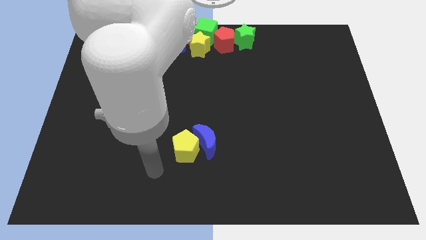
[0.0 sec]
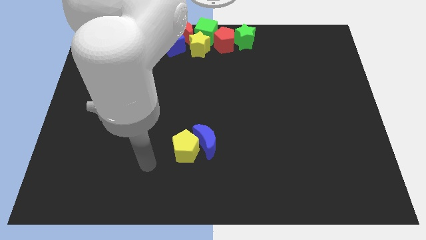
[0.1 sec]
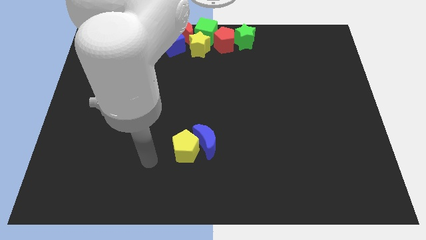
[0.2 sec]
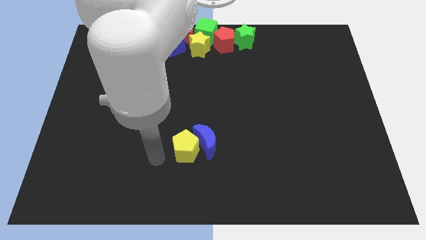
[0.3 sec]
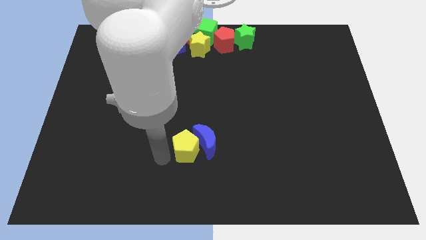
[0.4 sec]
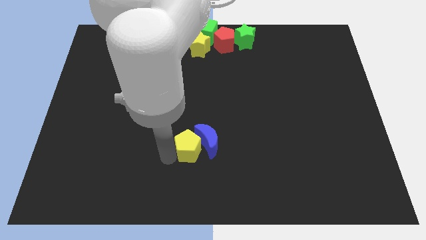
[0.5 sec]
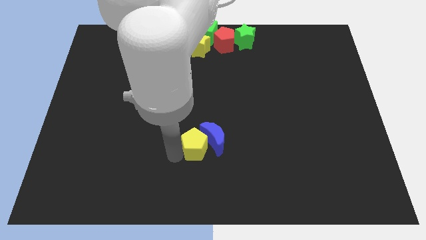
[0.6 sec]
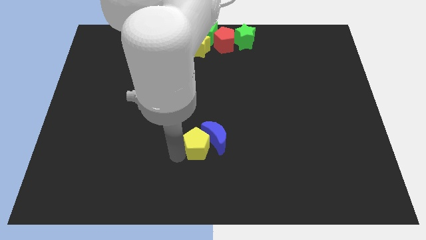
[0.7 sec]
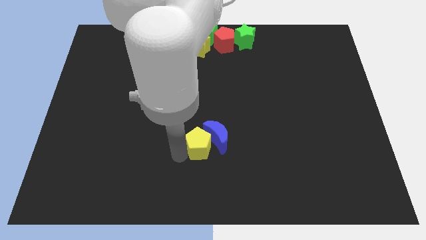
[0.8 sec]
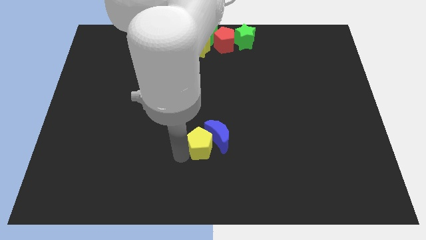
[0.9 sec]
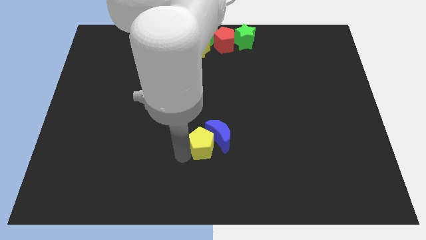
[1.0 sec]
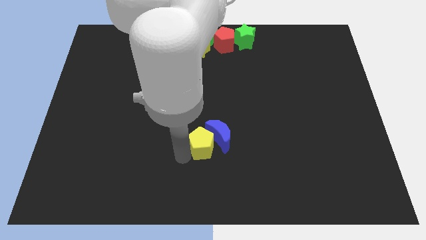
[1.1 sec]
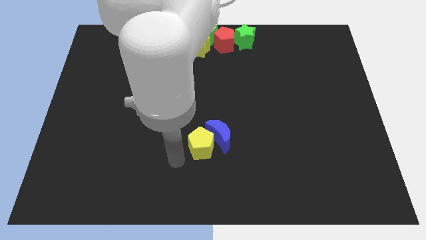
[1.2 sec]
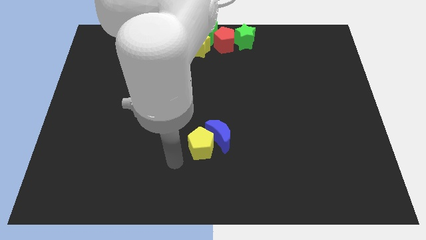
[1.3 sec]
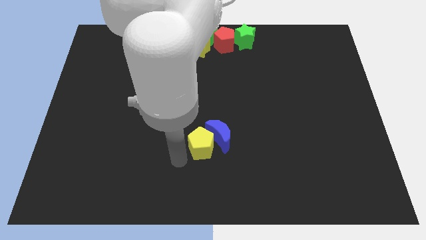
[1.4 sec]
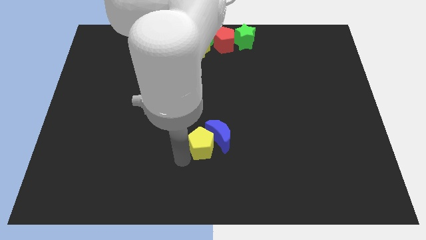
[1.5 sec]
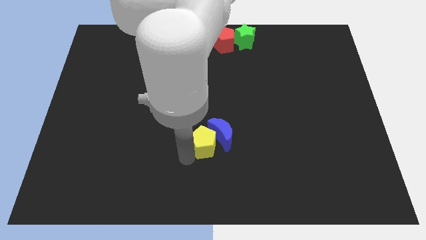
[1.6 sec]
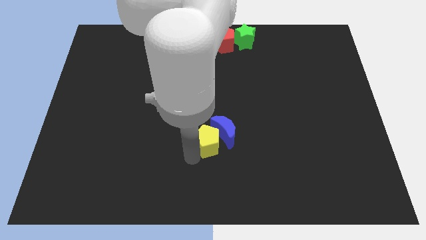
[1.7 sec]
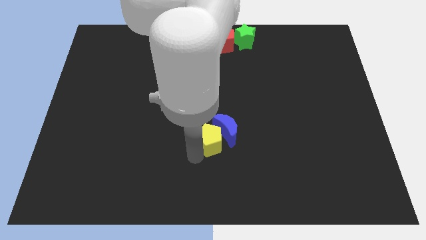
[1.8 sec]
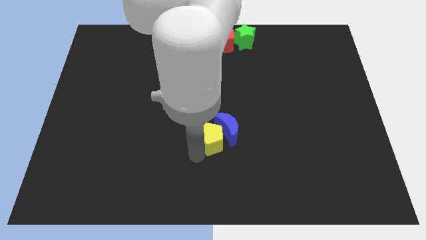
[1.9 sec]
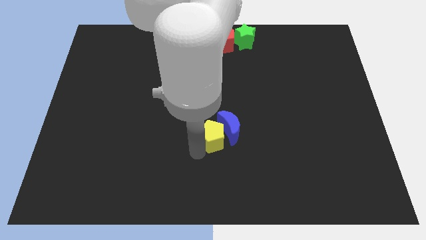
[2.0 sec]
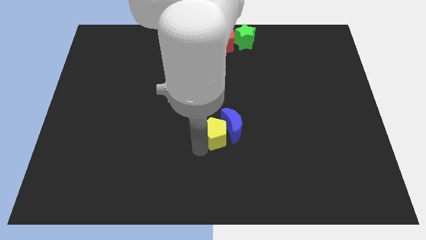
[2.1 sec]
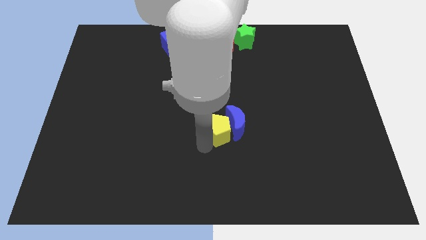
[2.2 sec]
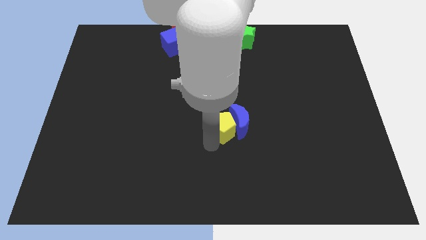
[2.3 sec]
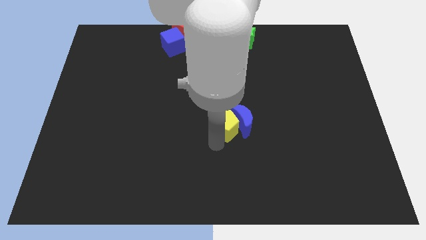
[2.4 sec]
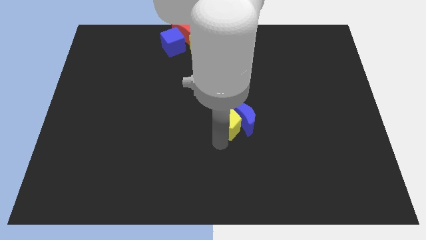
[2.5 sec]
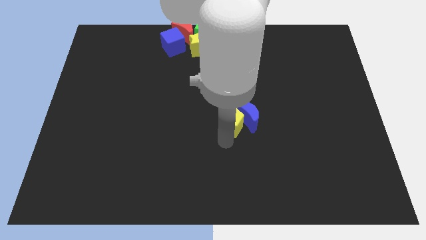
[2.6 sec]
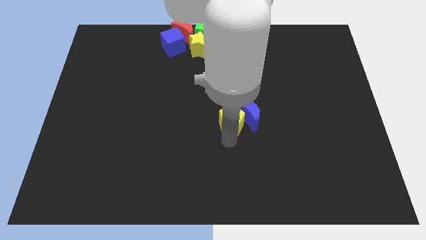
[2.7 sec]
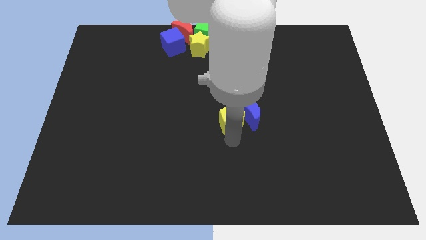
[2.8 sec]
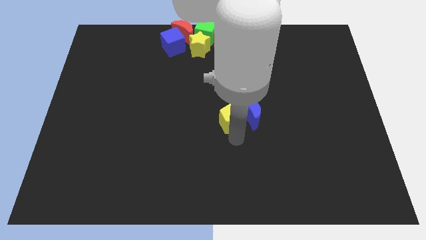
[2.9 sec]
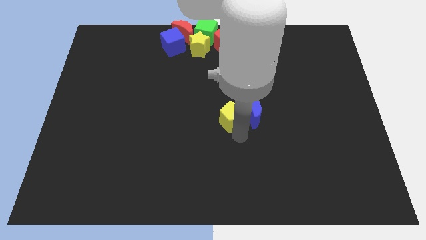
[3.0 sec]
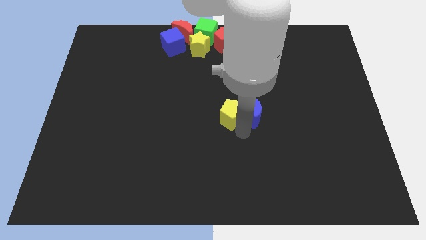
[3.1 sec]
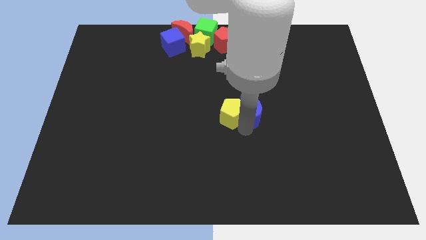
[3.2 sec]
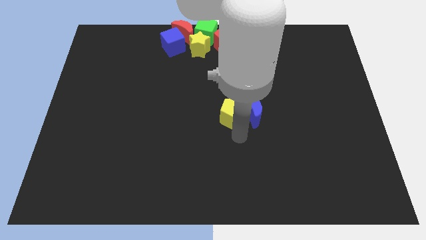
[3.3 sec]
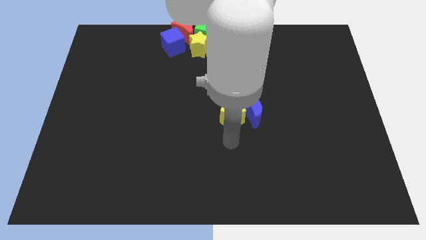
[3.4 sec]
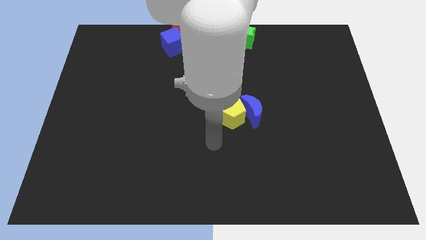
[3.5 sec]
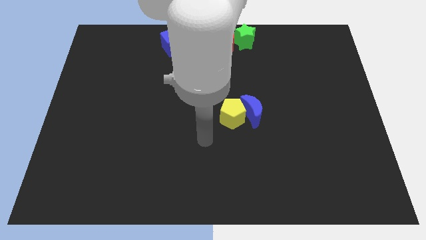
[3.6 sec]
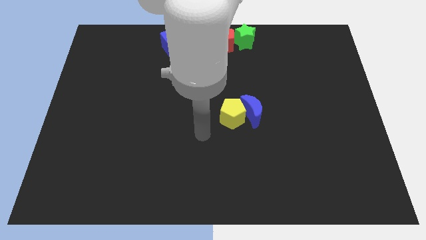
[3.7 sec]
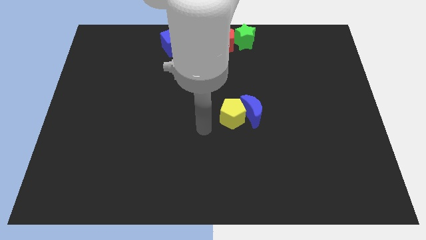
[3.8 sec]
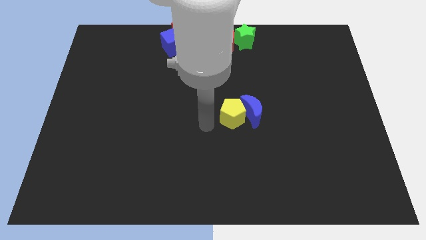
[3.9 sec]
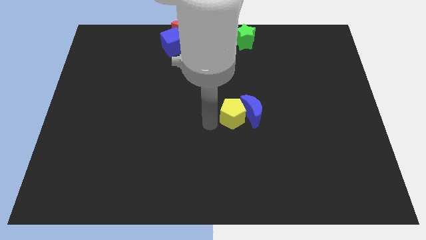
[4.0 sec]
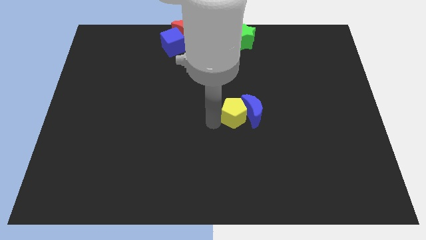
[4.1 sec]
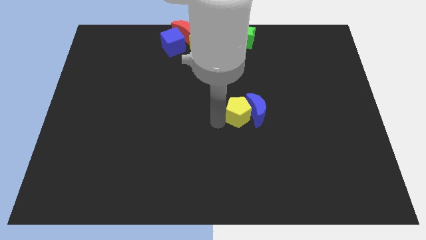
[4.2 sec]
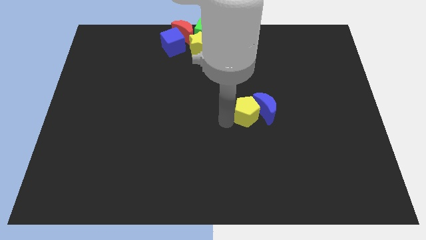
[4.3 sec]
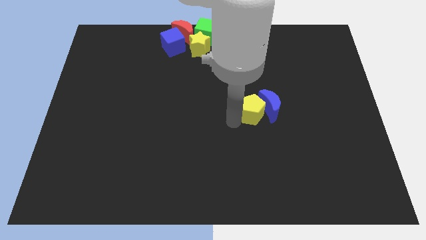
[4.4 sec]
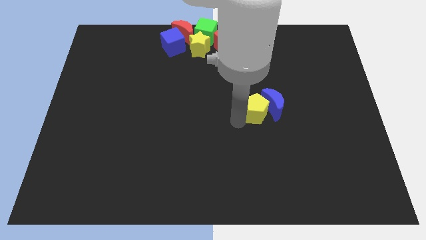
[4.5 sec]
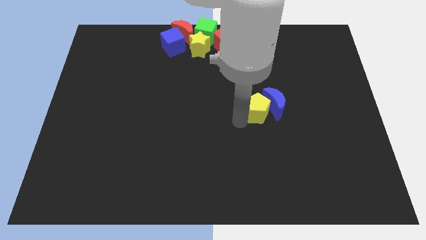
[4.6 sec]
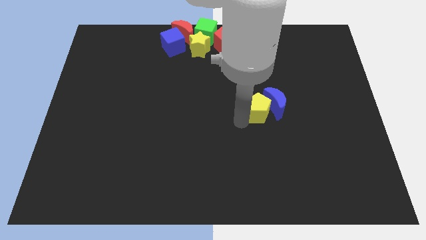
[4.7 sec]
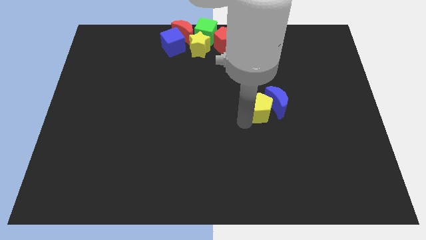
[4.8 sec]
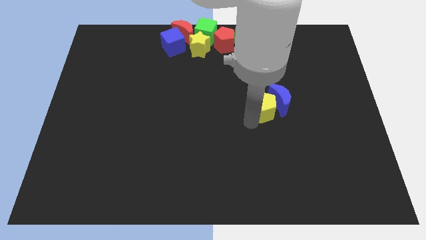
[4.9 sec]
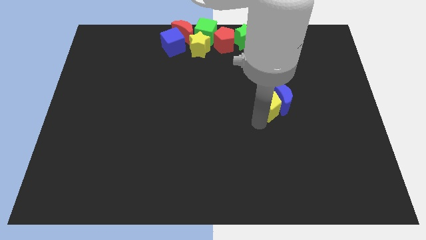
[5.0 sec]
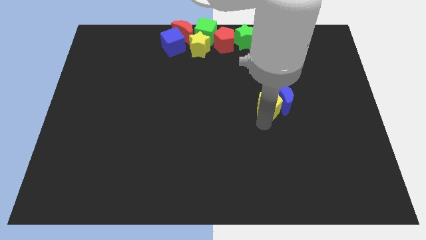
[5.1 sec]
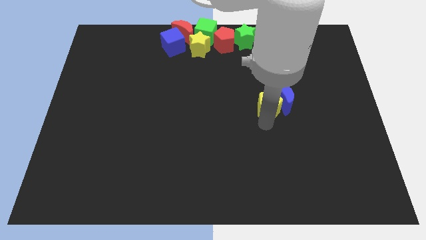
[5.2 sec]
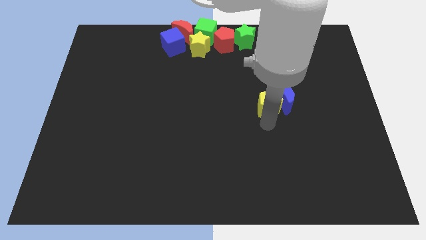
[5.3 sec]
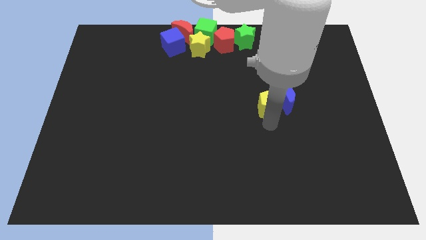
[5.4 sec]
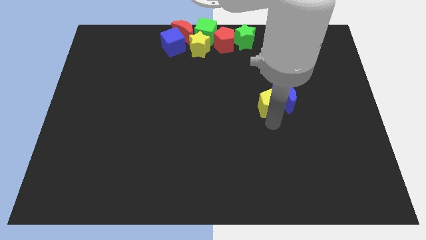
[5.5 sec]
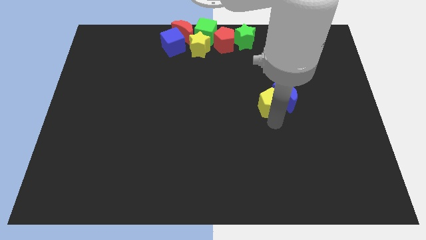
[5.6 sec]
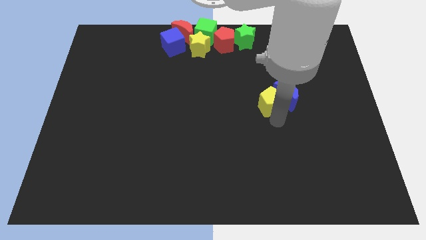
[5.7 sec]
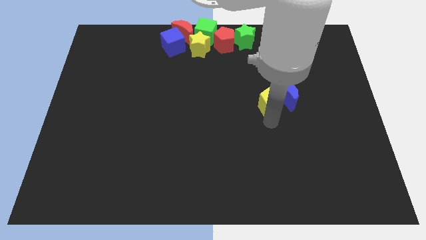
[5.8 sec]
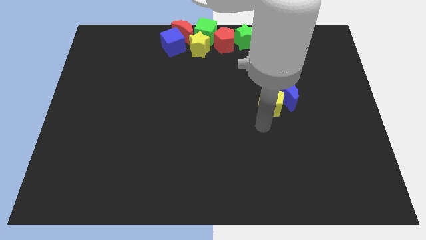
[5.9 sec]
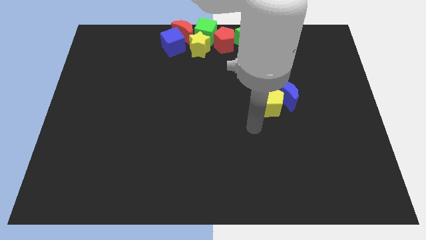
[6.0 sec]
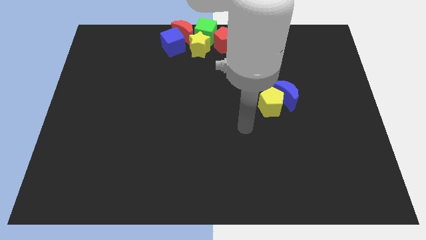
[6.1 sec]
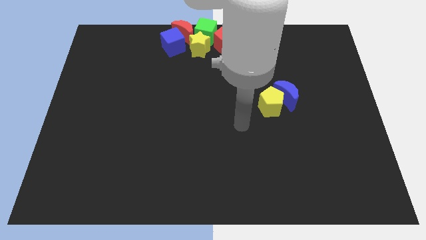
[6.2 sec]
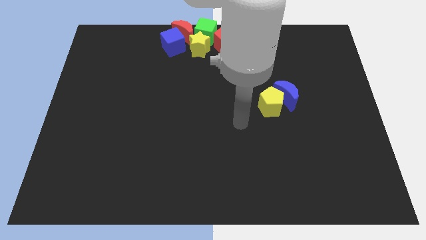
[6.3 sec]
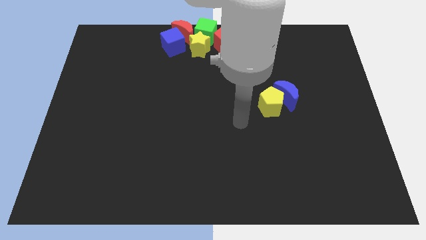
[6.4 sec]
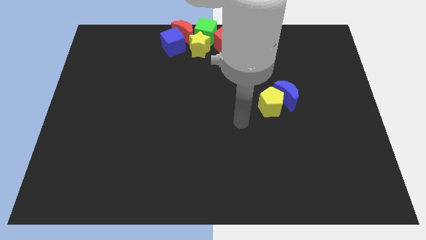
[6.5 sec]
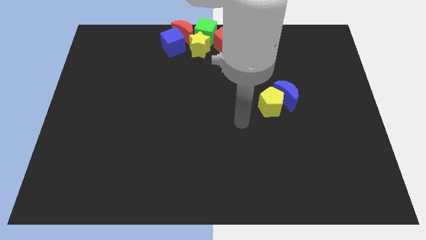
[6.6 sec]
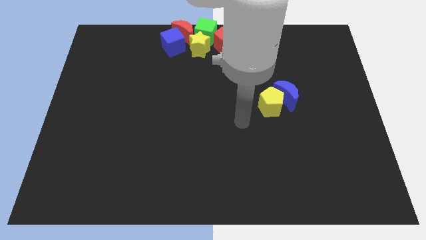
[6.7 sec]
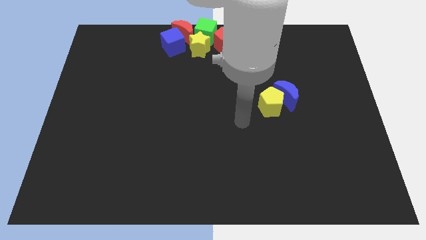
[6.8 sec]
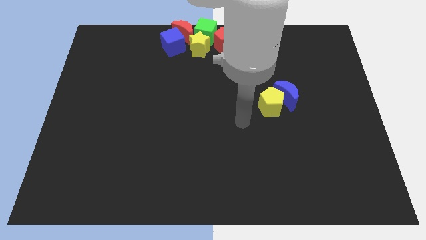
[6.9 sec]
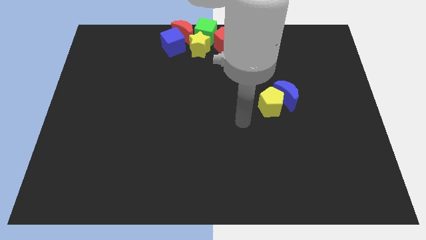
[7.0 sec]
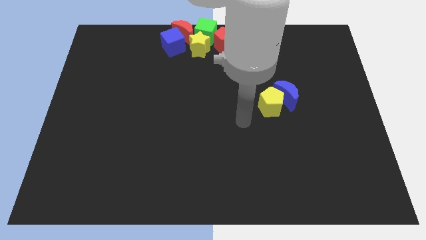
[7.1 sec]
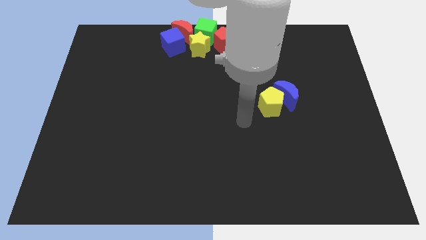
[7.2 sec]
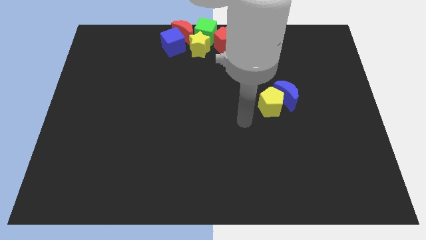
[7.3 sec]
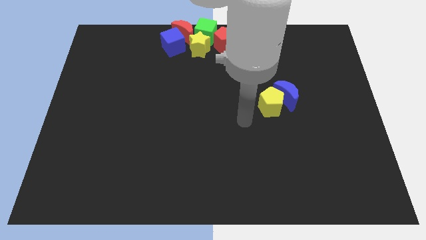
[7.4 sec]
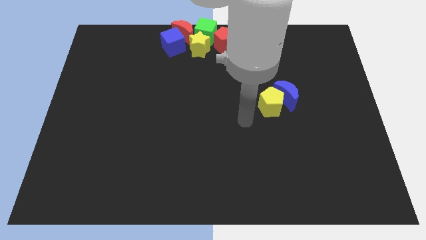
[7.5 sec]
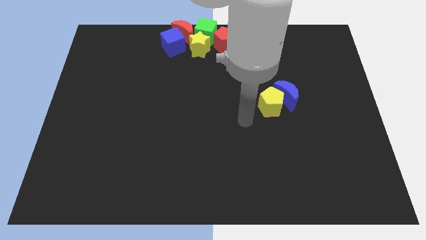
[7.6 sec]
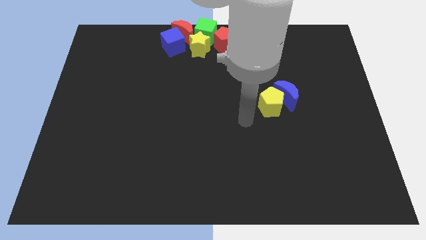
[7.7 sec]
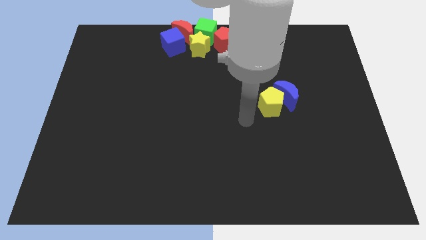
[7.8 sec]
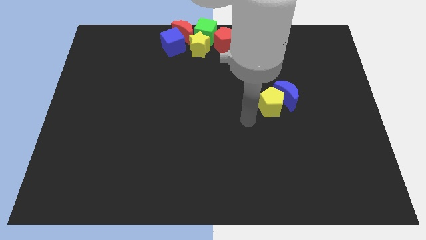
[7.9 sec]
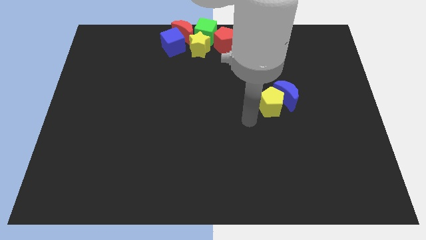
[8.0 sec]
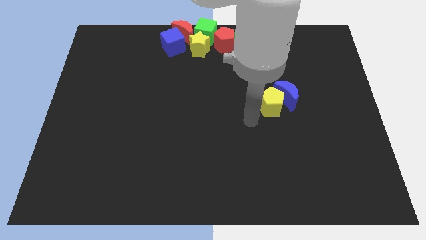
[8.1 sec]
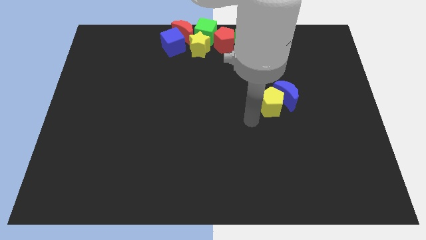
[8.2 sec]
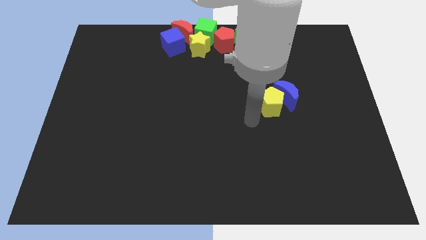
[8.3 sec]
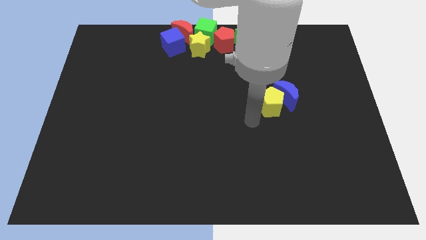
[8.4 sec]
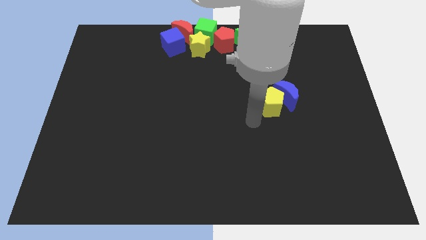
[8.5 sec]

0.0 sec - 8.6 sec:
push the blue moon towards the top right corner with the yellow pentagon

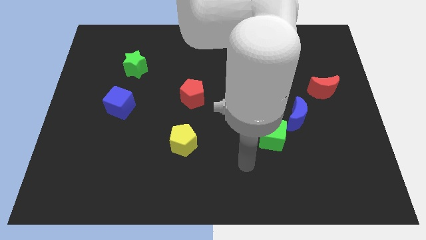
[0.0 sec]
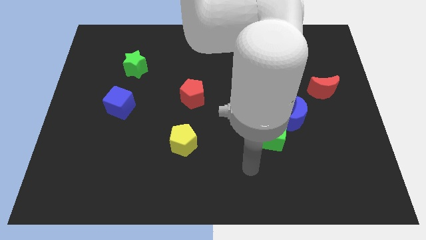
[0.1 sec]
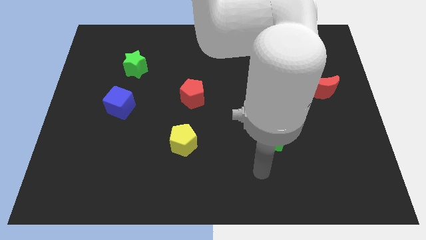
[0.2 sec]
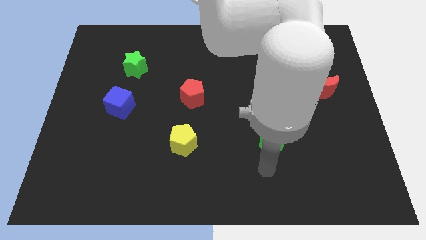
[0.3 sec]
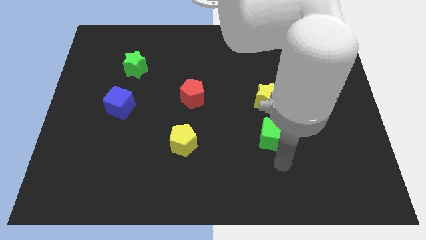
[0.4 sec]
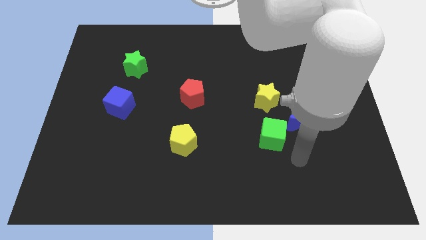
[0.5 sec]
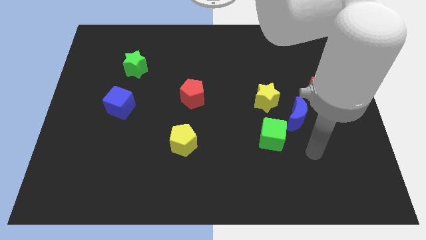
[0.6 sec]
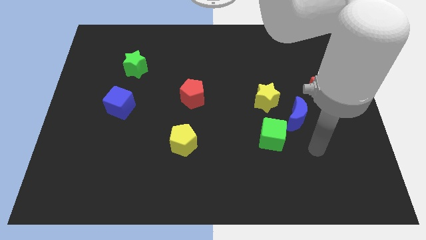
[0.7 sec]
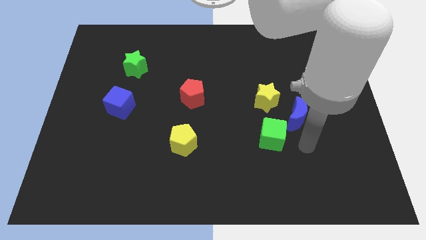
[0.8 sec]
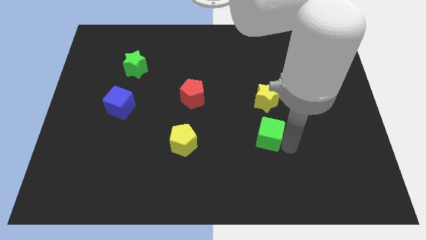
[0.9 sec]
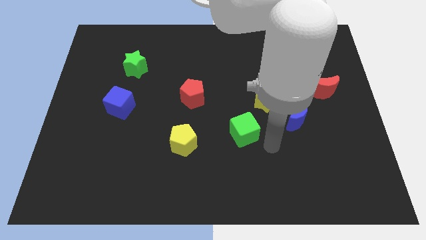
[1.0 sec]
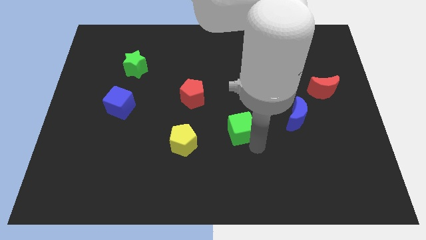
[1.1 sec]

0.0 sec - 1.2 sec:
move green cube towards center
